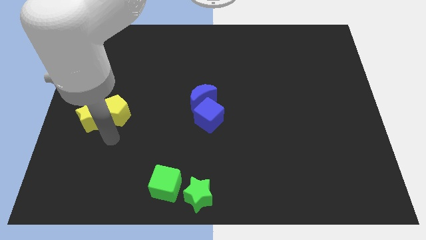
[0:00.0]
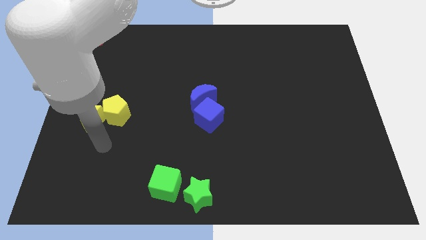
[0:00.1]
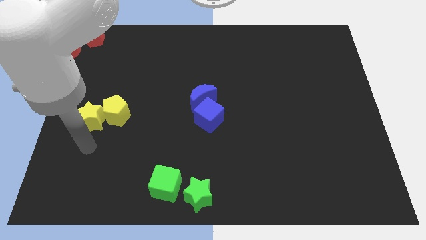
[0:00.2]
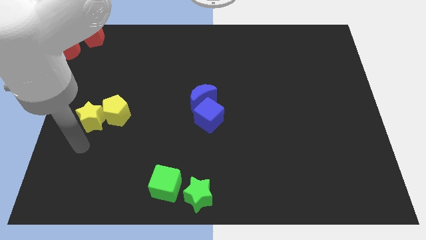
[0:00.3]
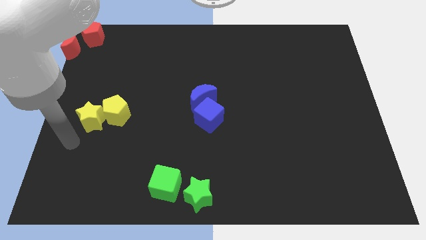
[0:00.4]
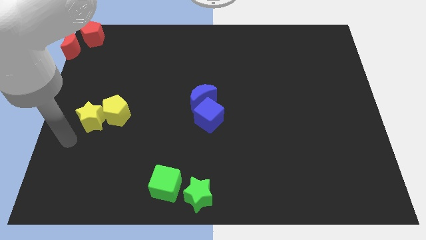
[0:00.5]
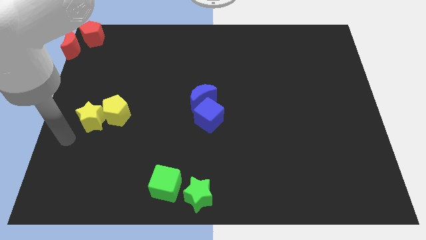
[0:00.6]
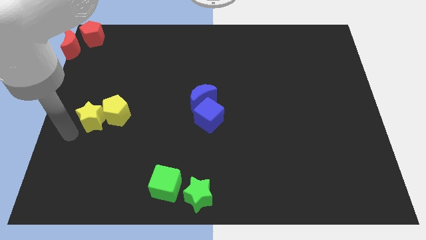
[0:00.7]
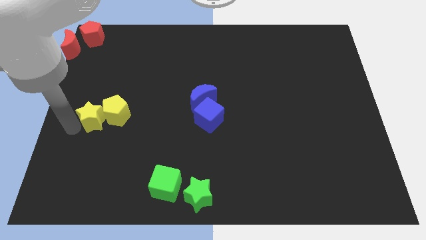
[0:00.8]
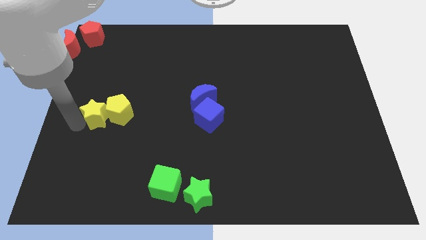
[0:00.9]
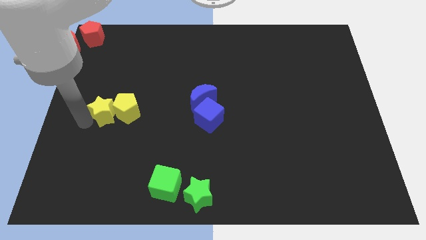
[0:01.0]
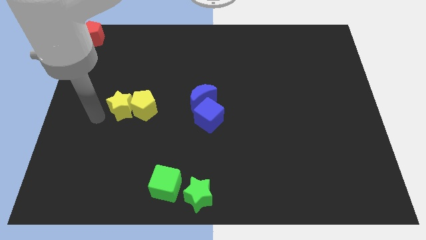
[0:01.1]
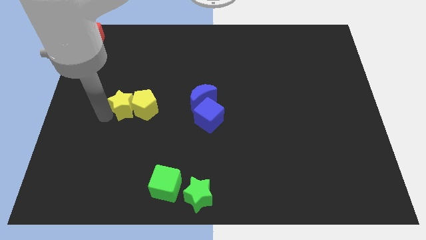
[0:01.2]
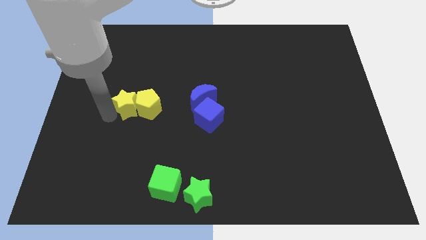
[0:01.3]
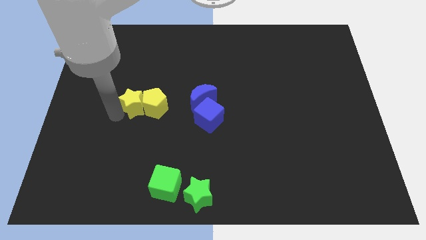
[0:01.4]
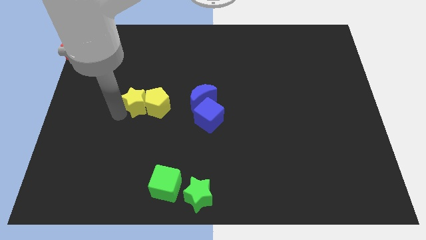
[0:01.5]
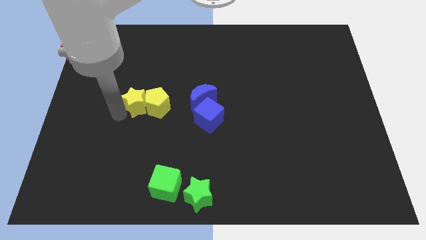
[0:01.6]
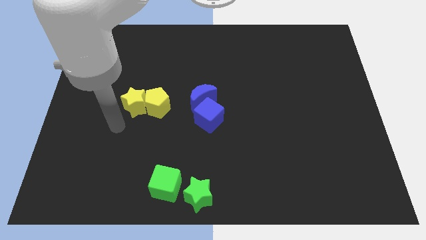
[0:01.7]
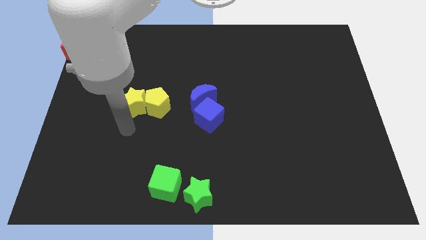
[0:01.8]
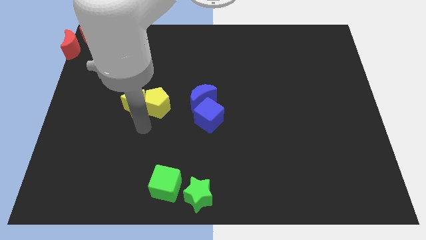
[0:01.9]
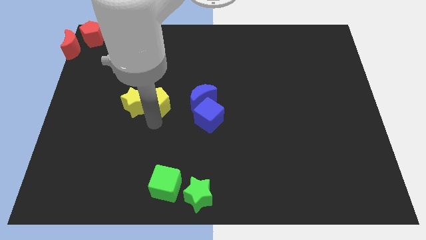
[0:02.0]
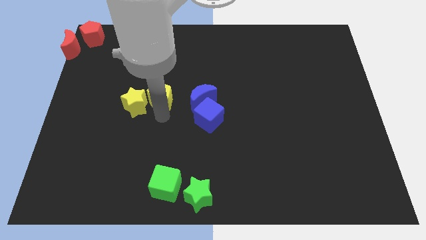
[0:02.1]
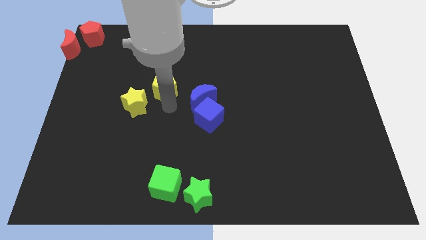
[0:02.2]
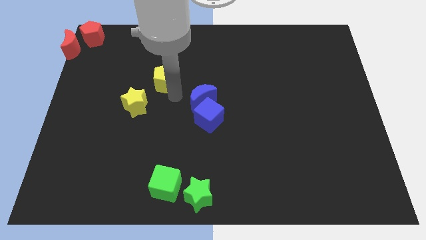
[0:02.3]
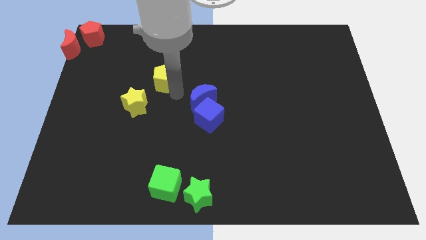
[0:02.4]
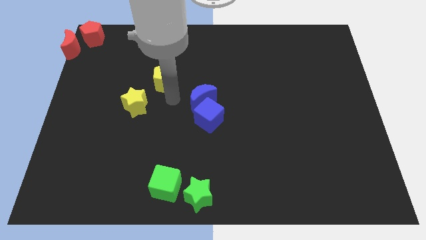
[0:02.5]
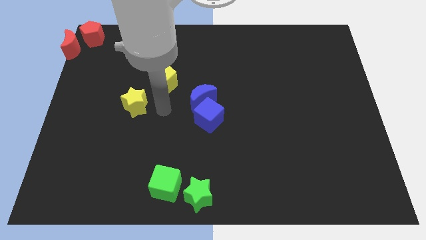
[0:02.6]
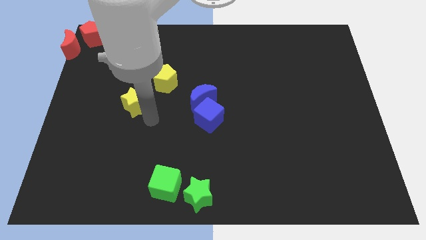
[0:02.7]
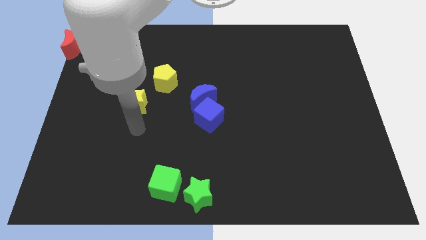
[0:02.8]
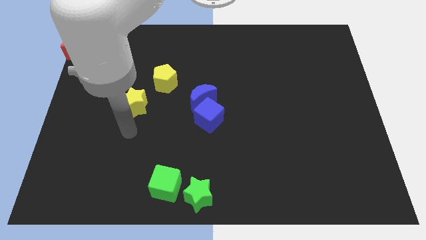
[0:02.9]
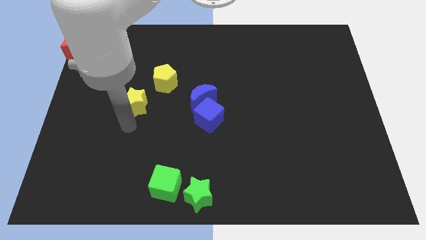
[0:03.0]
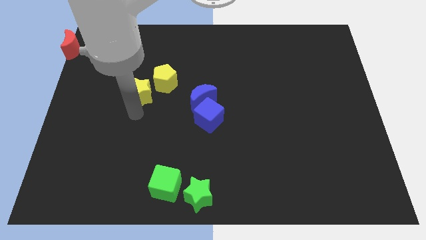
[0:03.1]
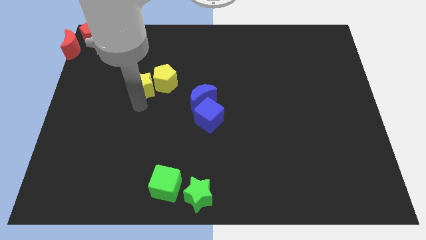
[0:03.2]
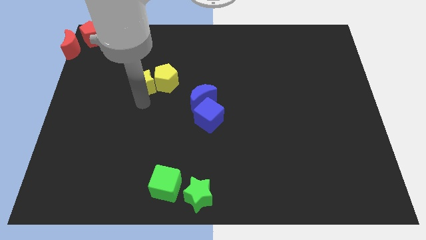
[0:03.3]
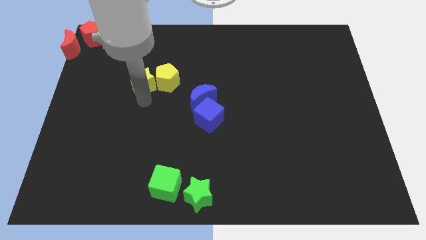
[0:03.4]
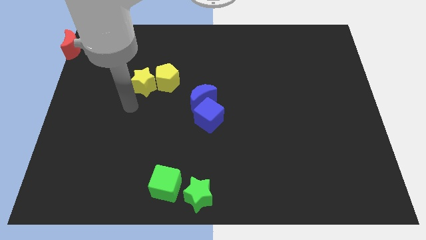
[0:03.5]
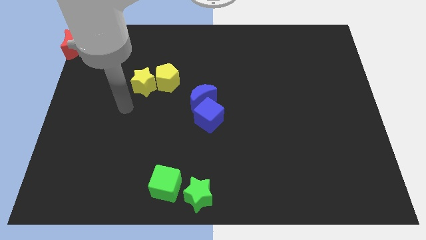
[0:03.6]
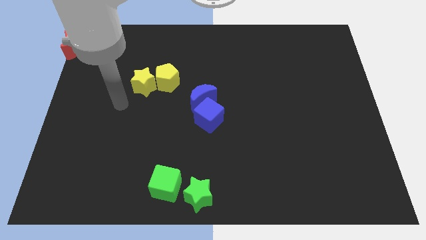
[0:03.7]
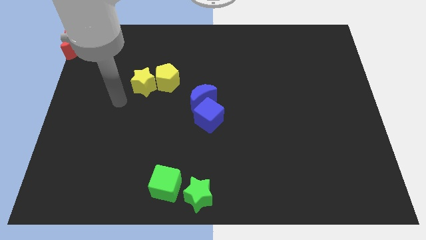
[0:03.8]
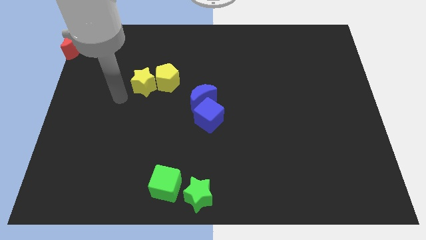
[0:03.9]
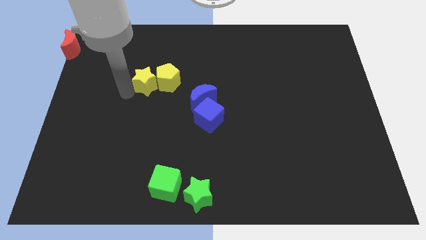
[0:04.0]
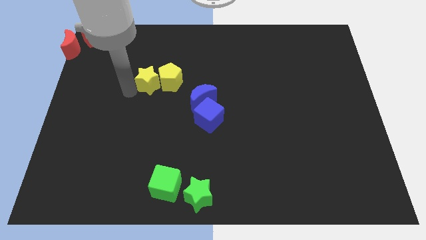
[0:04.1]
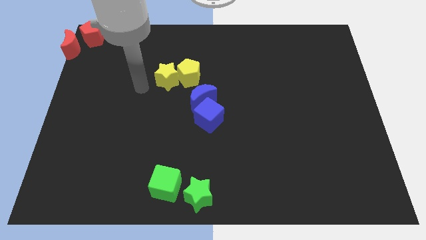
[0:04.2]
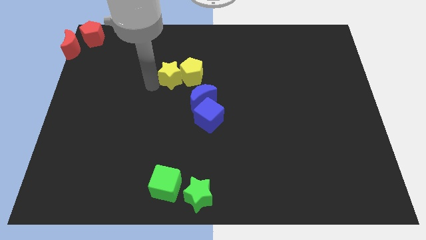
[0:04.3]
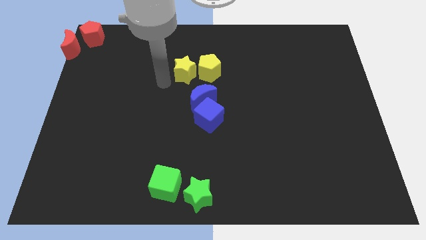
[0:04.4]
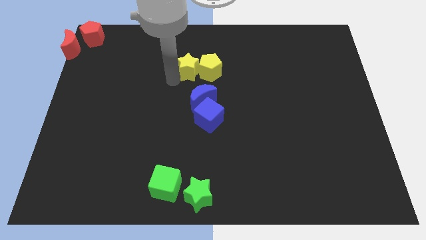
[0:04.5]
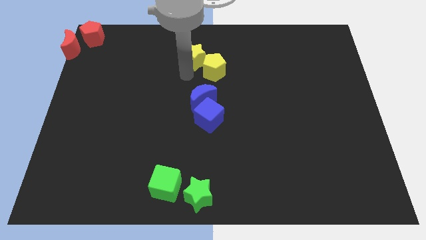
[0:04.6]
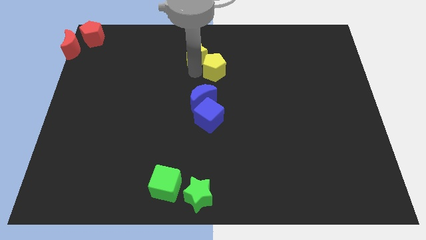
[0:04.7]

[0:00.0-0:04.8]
place the yellow star along with the yellow pentagon above the blue blocks

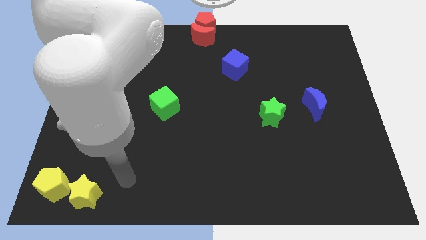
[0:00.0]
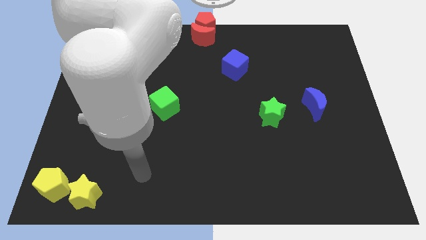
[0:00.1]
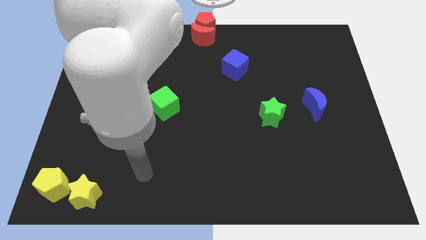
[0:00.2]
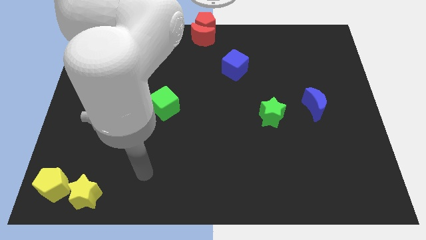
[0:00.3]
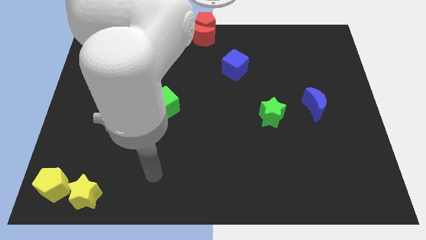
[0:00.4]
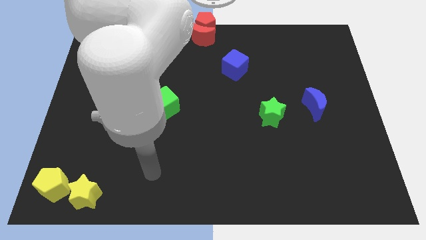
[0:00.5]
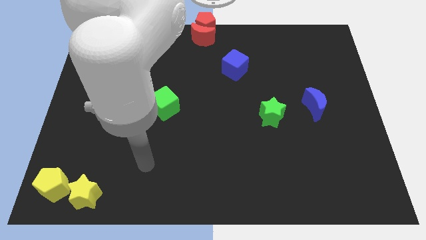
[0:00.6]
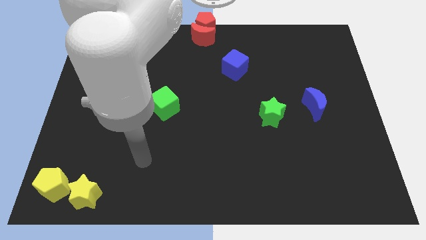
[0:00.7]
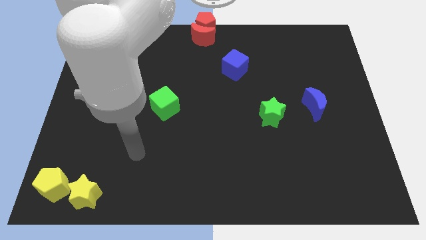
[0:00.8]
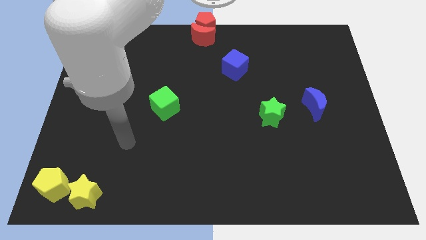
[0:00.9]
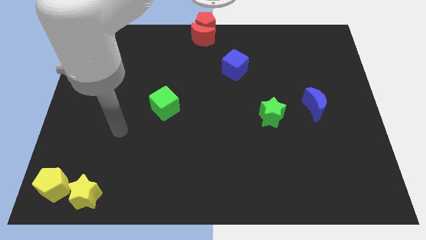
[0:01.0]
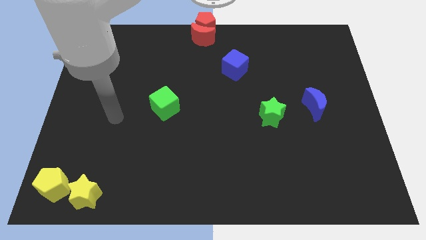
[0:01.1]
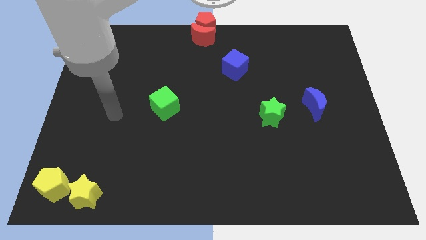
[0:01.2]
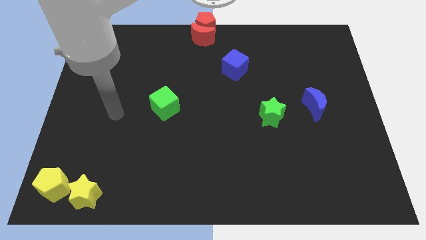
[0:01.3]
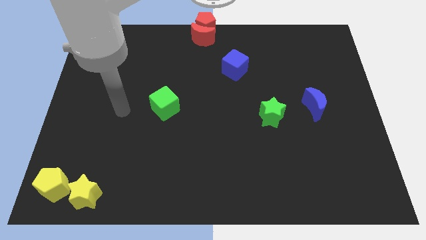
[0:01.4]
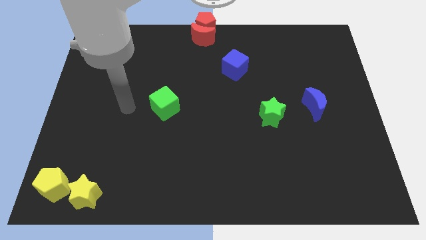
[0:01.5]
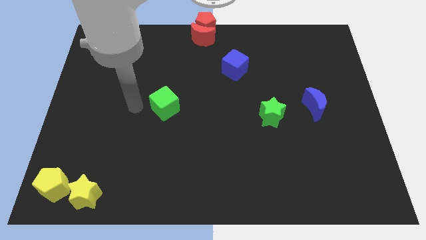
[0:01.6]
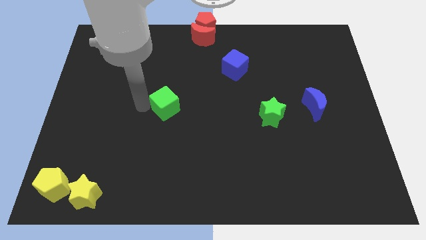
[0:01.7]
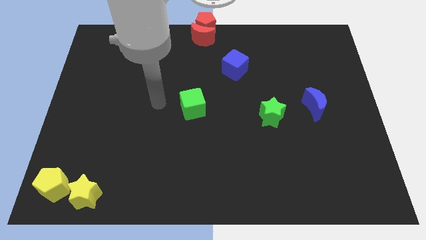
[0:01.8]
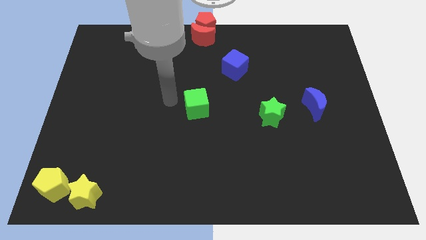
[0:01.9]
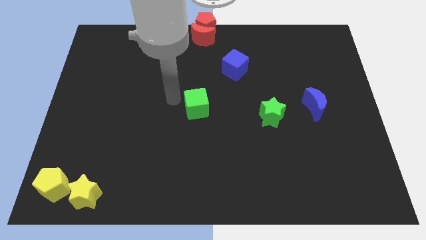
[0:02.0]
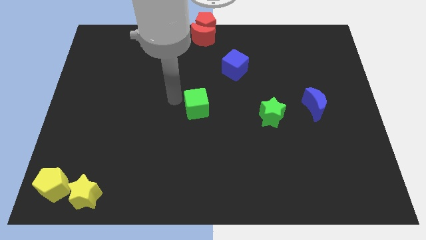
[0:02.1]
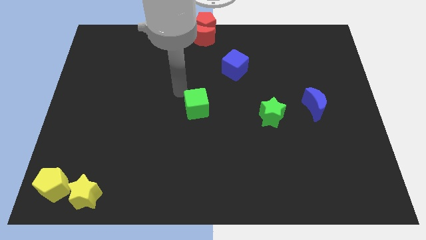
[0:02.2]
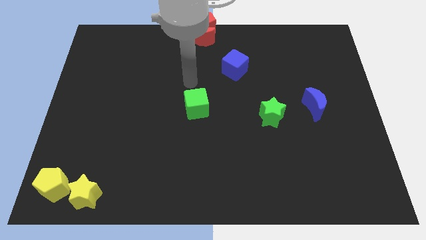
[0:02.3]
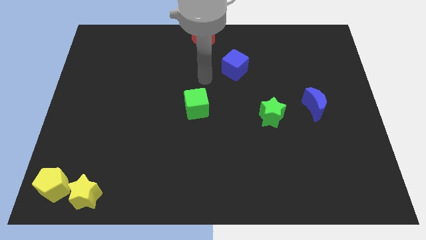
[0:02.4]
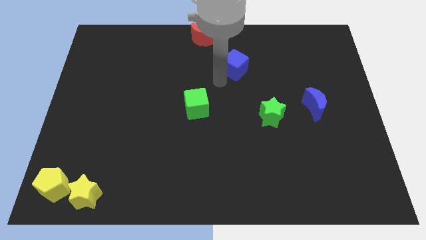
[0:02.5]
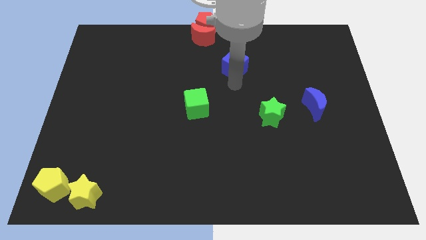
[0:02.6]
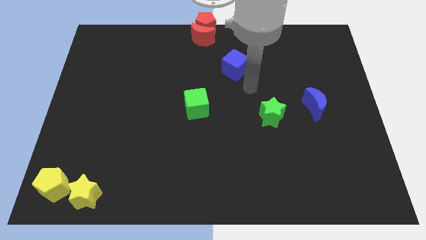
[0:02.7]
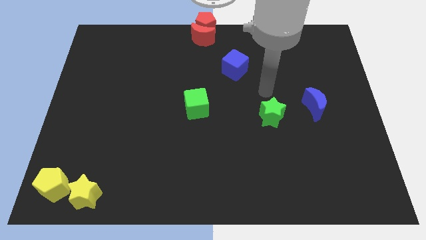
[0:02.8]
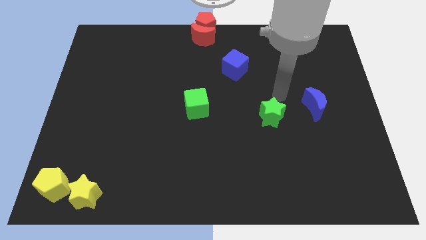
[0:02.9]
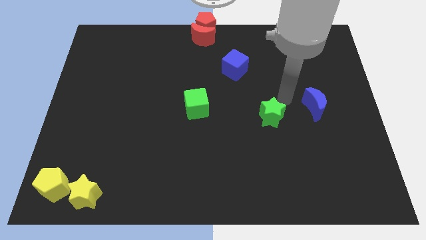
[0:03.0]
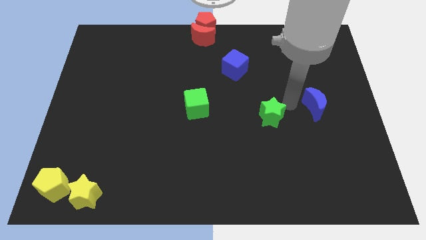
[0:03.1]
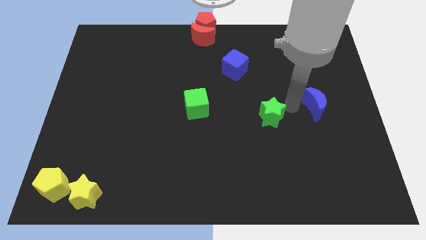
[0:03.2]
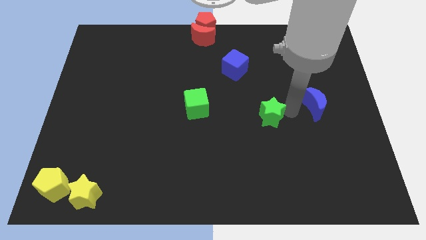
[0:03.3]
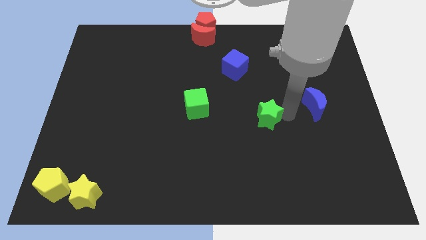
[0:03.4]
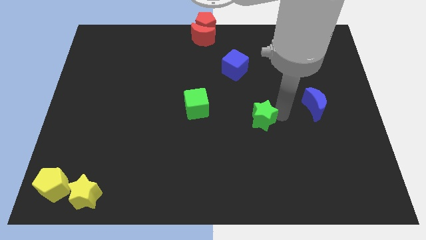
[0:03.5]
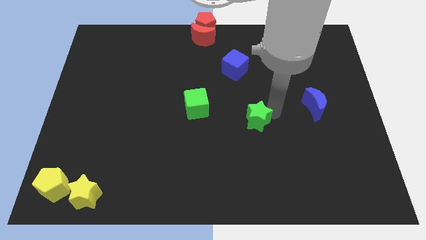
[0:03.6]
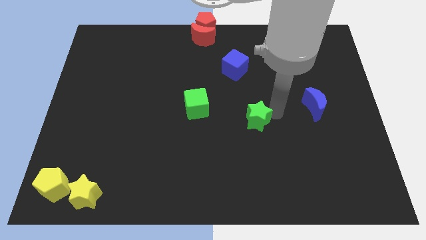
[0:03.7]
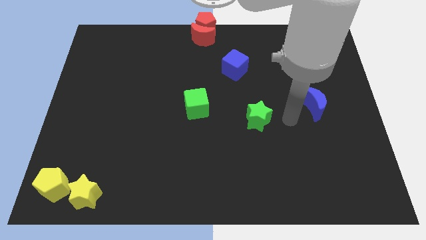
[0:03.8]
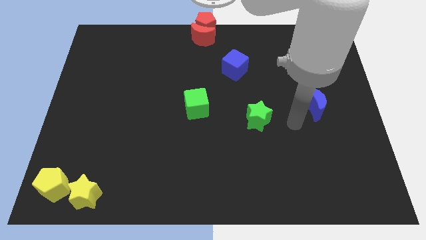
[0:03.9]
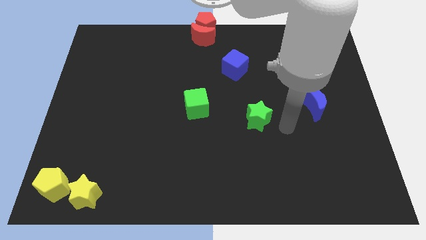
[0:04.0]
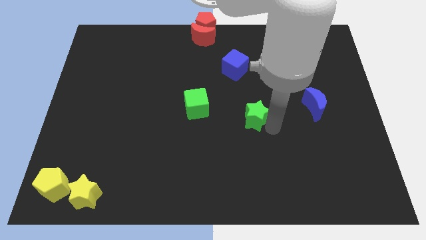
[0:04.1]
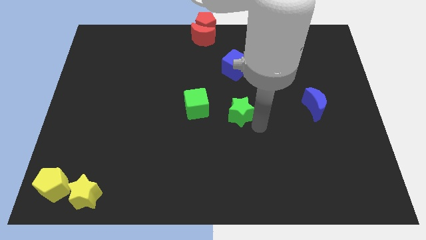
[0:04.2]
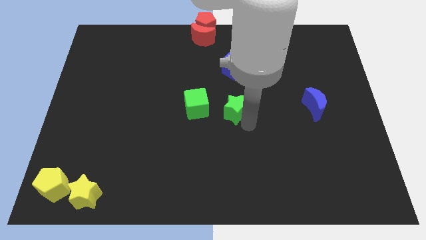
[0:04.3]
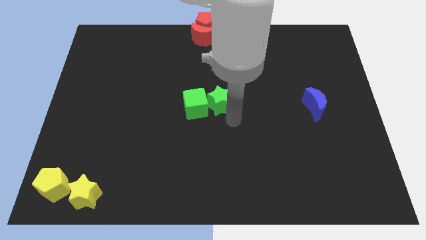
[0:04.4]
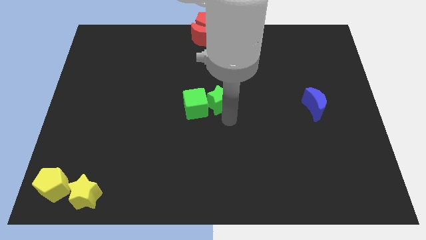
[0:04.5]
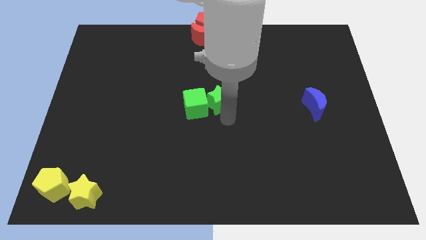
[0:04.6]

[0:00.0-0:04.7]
push the green star slightly left
